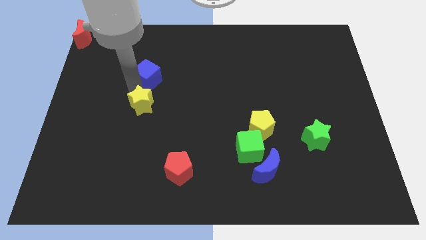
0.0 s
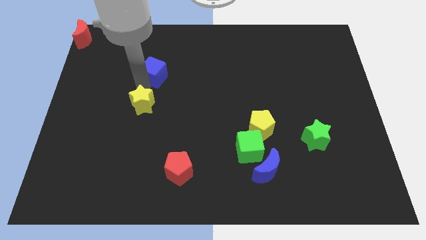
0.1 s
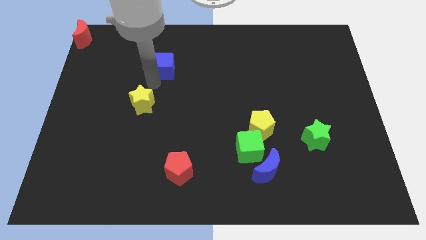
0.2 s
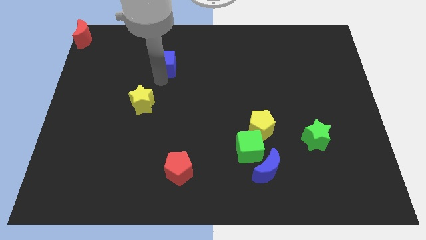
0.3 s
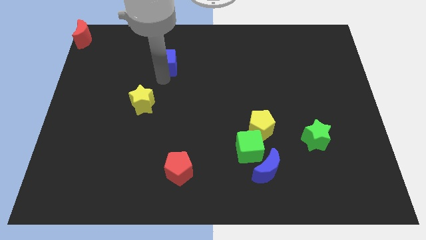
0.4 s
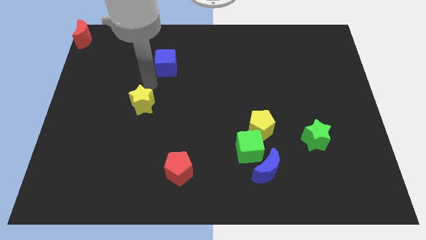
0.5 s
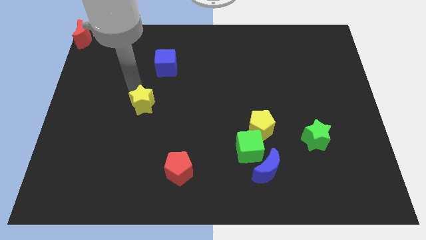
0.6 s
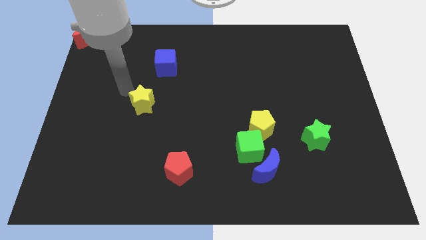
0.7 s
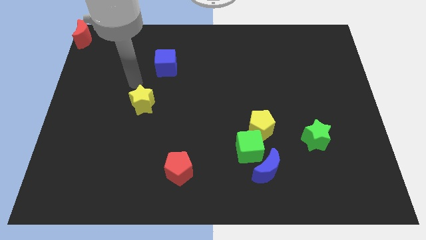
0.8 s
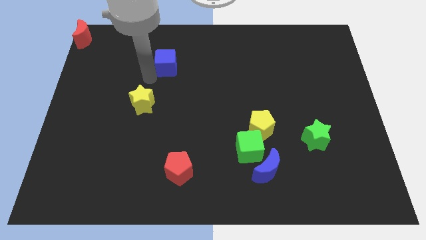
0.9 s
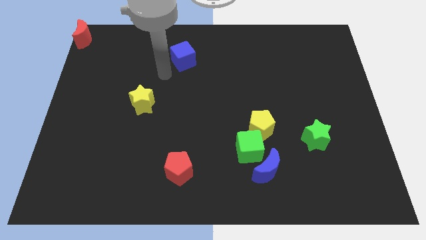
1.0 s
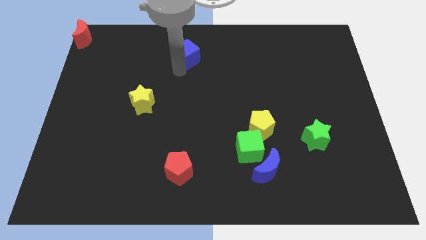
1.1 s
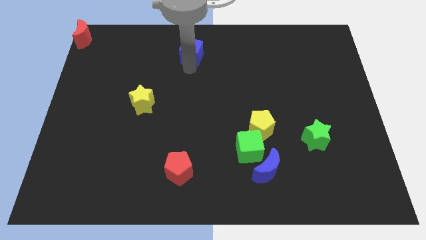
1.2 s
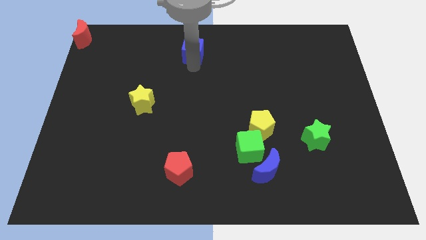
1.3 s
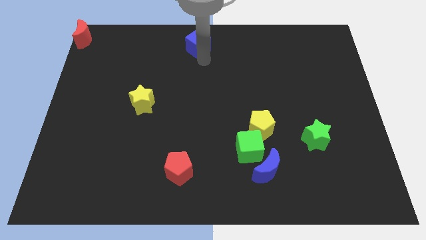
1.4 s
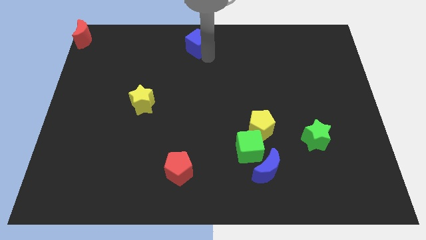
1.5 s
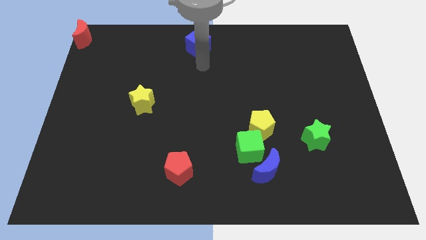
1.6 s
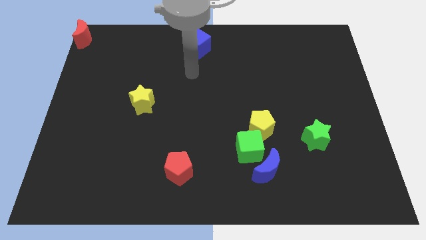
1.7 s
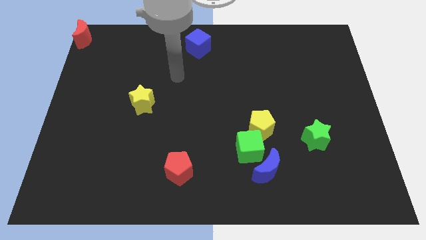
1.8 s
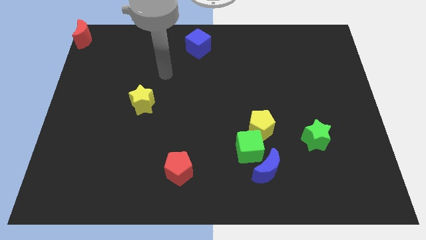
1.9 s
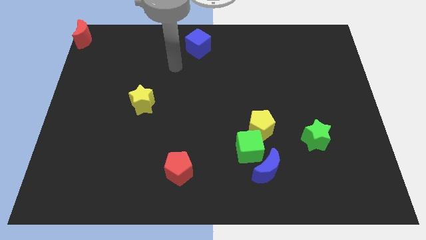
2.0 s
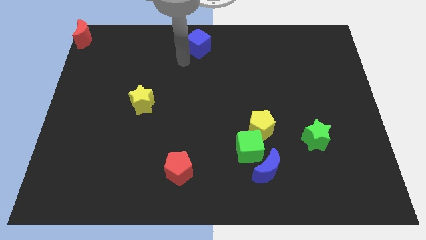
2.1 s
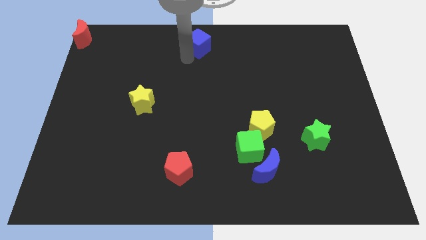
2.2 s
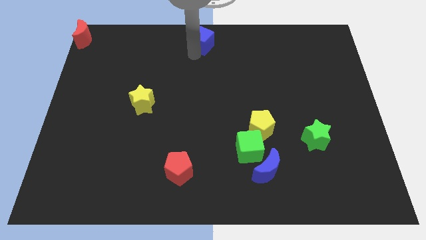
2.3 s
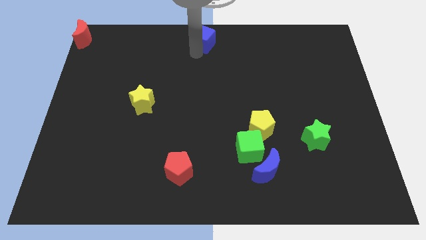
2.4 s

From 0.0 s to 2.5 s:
move the blue cube towards top center side

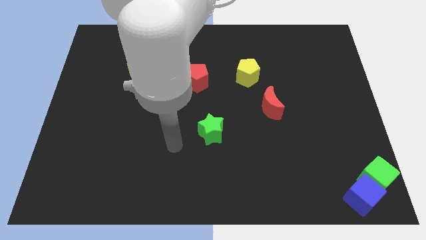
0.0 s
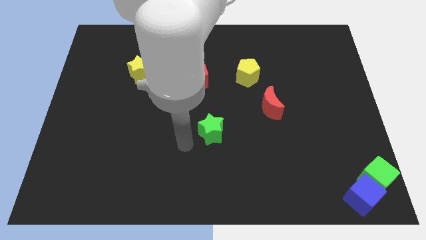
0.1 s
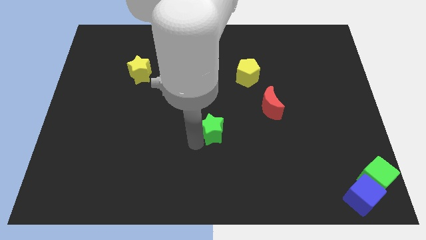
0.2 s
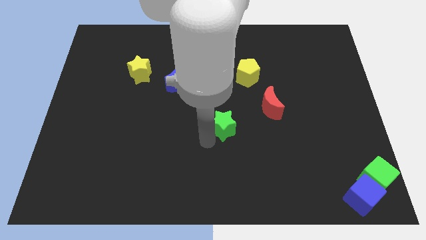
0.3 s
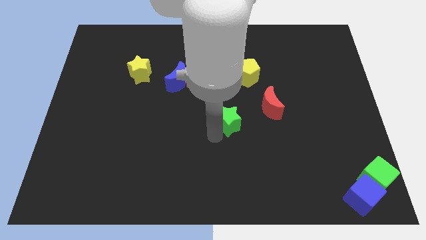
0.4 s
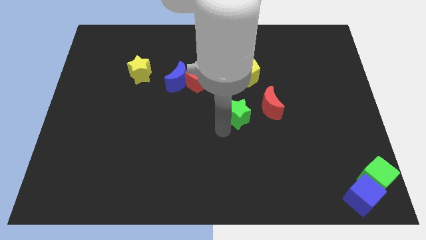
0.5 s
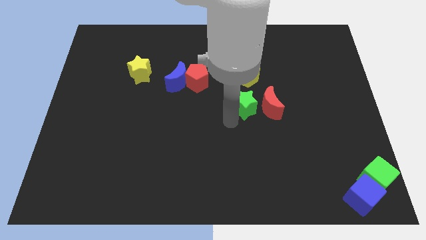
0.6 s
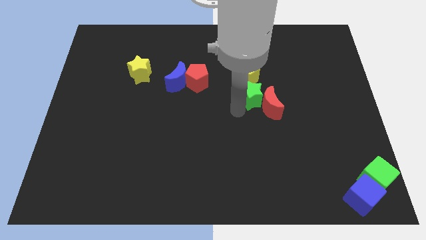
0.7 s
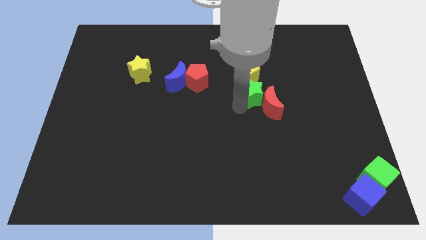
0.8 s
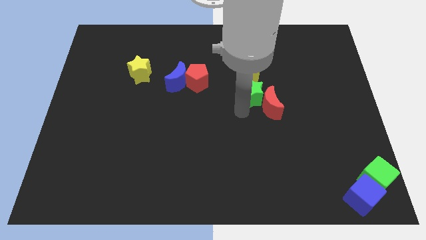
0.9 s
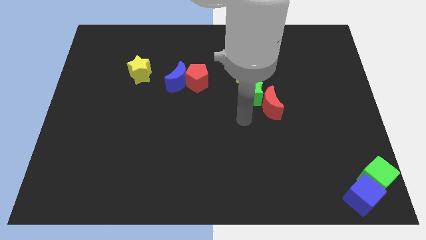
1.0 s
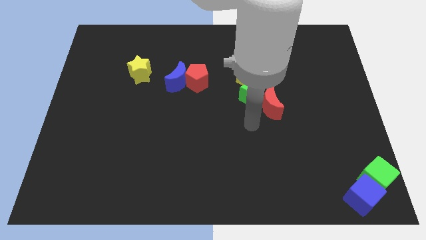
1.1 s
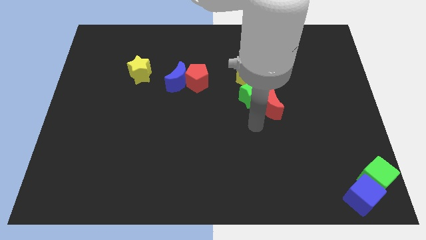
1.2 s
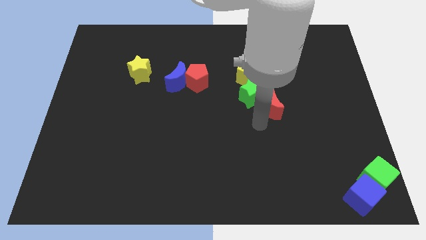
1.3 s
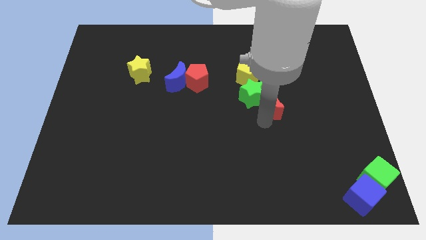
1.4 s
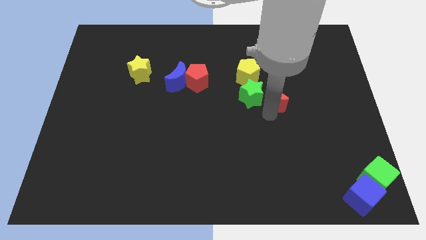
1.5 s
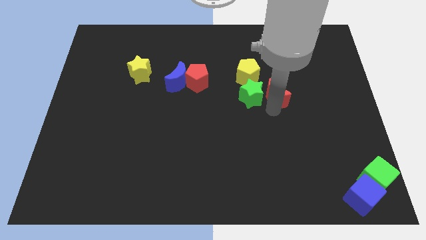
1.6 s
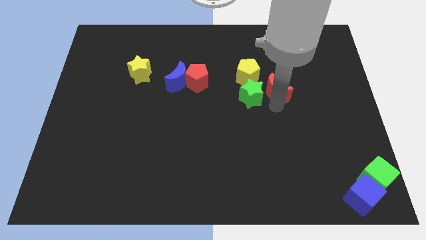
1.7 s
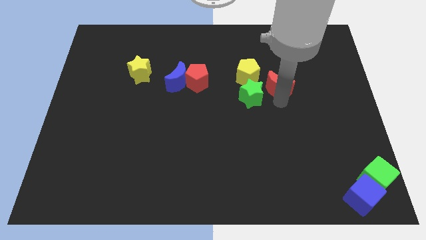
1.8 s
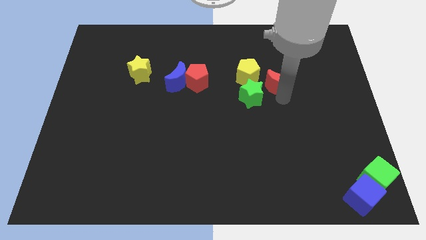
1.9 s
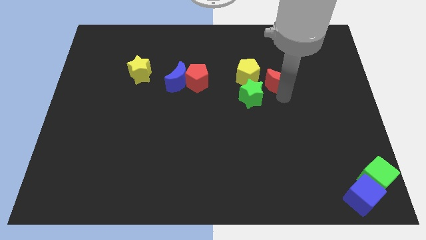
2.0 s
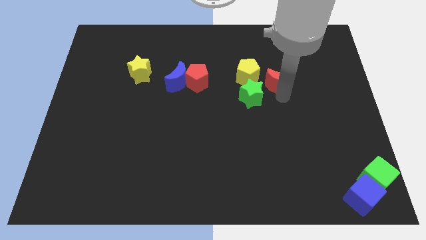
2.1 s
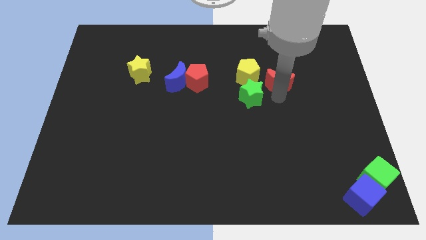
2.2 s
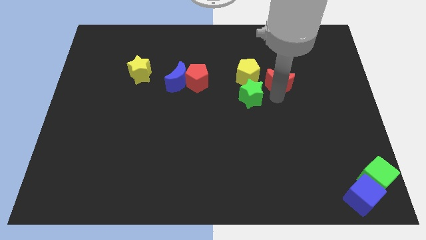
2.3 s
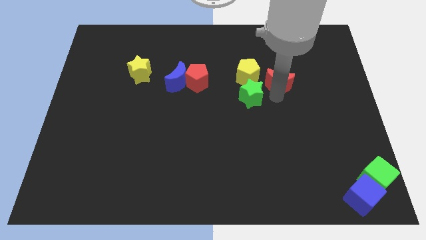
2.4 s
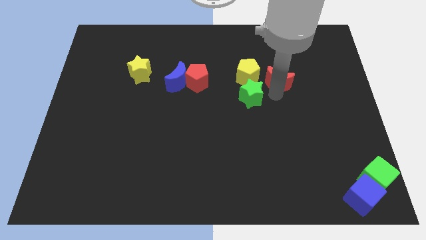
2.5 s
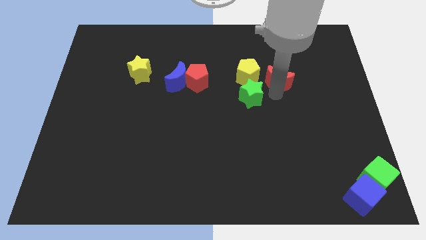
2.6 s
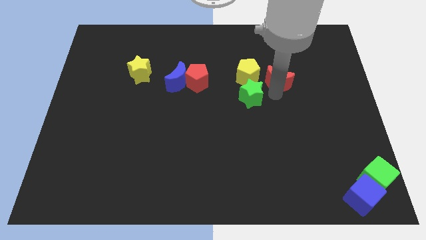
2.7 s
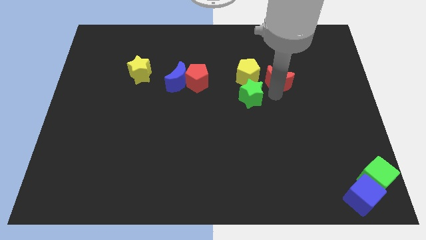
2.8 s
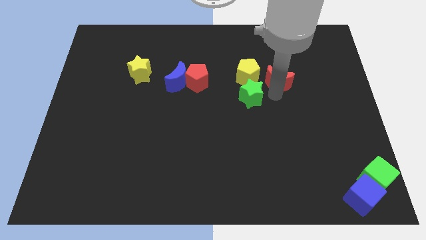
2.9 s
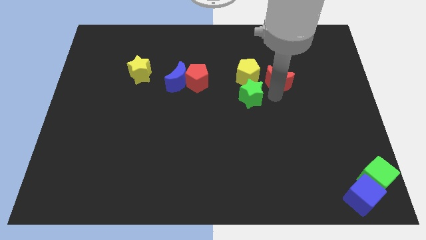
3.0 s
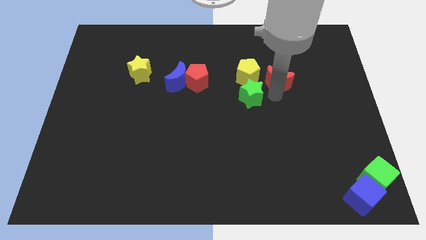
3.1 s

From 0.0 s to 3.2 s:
slide the red moon towards the top side

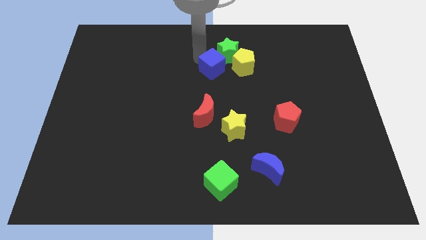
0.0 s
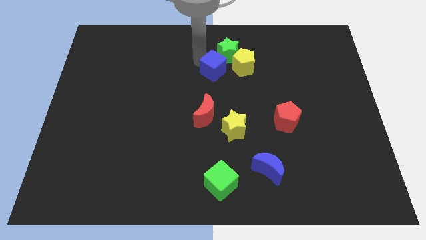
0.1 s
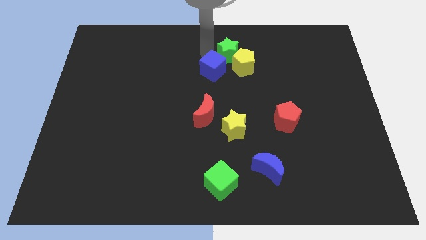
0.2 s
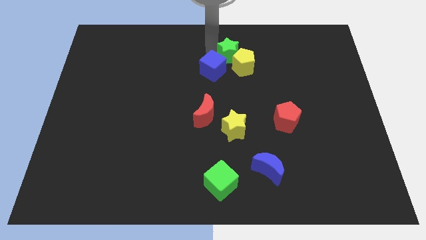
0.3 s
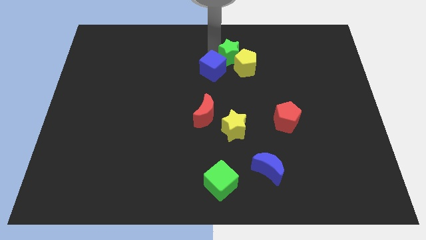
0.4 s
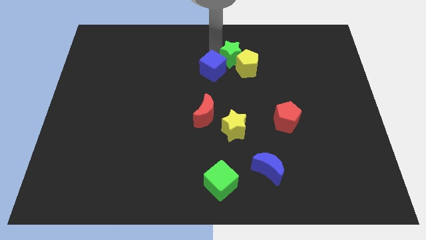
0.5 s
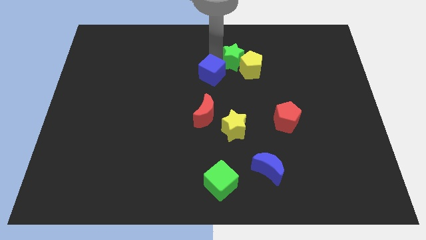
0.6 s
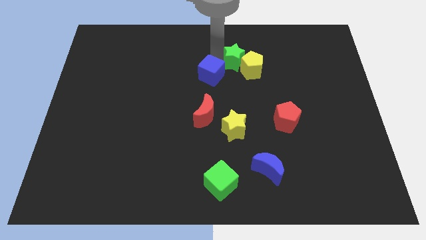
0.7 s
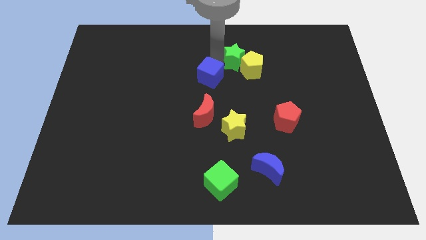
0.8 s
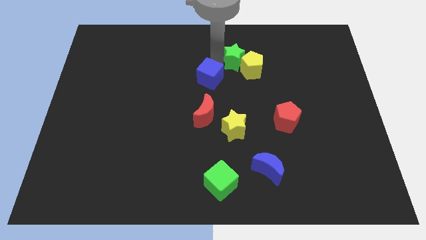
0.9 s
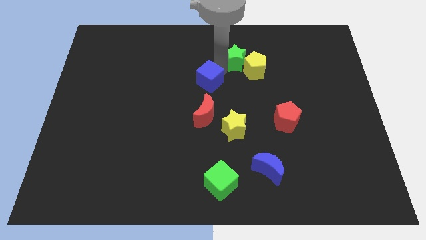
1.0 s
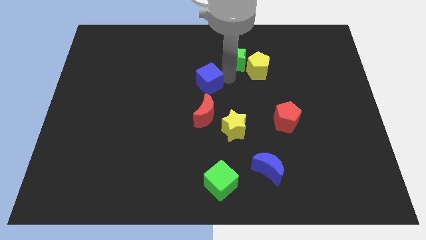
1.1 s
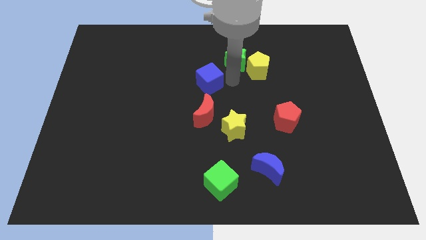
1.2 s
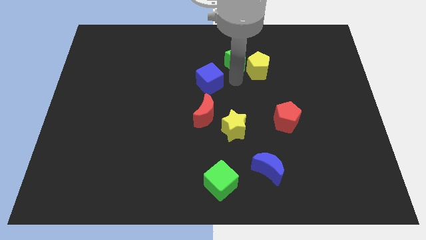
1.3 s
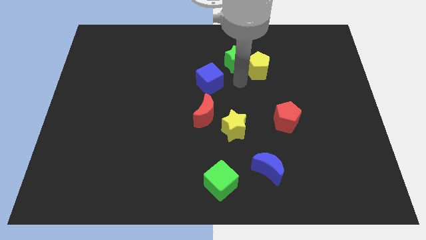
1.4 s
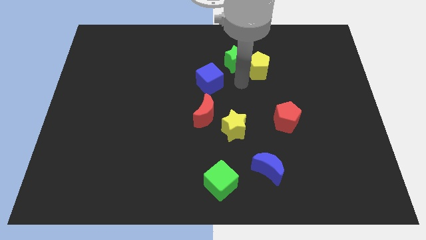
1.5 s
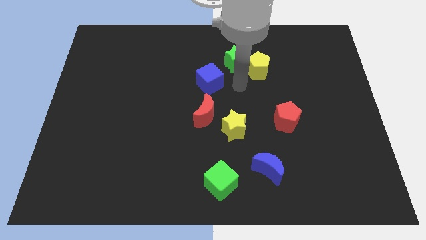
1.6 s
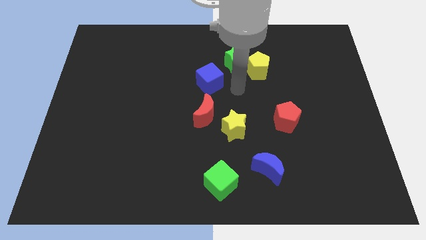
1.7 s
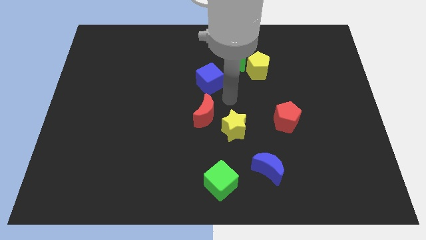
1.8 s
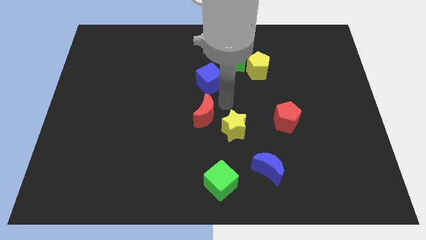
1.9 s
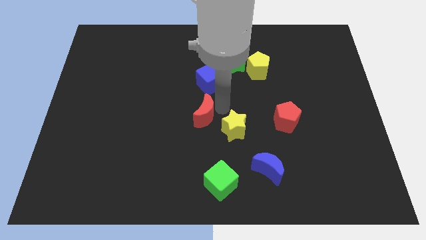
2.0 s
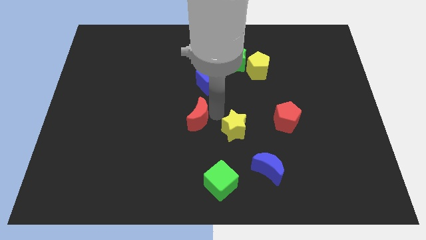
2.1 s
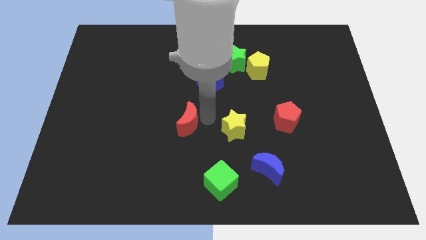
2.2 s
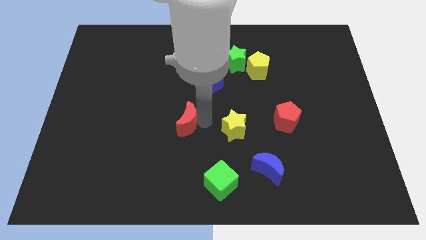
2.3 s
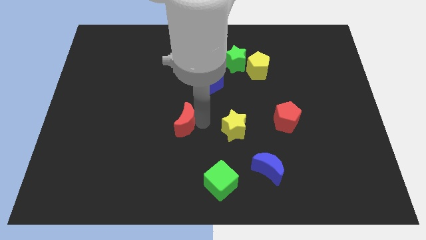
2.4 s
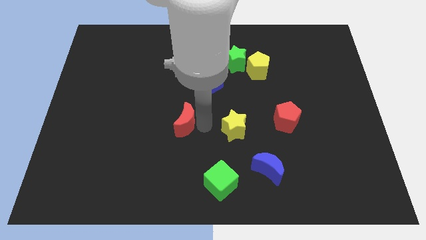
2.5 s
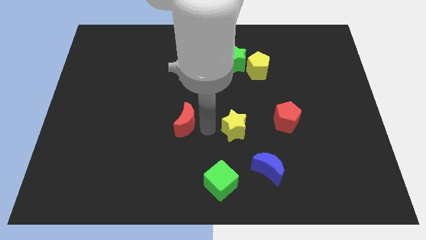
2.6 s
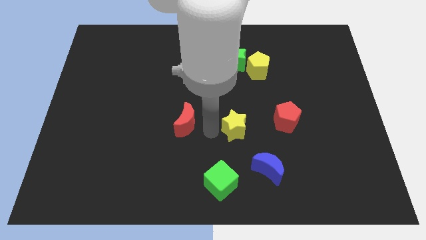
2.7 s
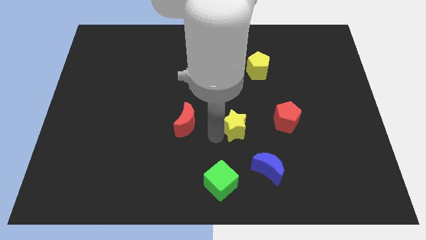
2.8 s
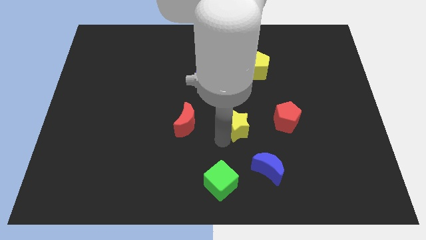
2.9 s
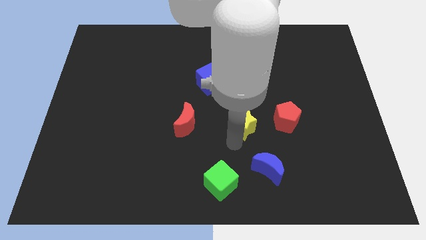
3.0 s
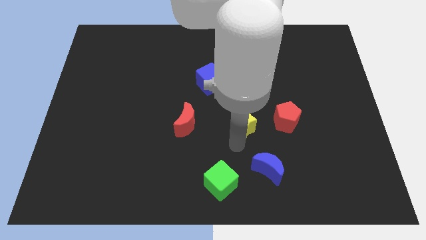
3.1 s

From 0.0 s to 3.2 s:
adjust the group of blocks to form circle

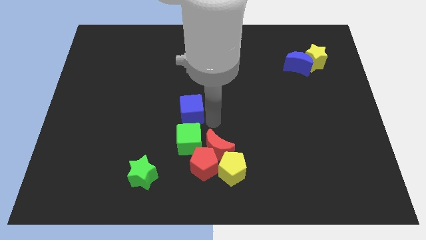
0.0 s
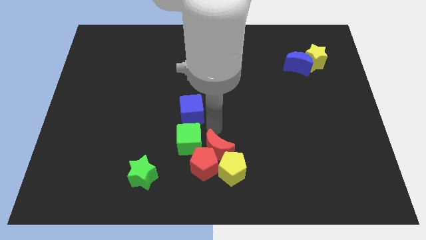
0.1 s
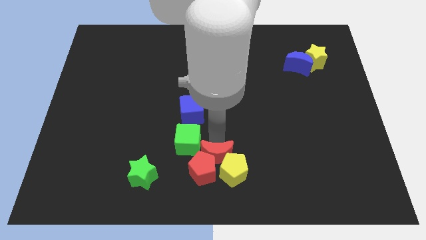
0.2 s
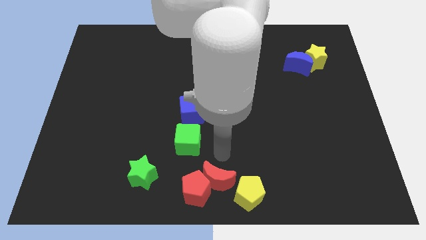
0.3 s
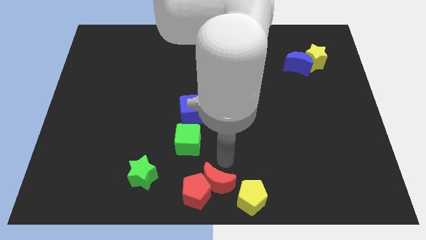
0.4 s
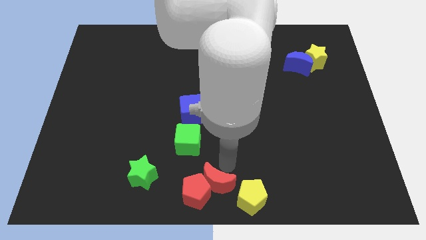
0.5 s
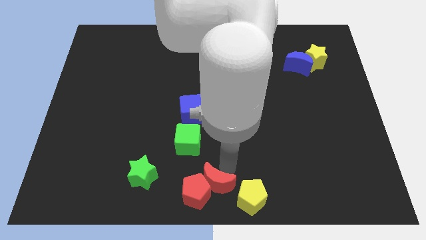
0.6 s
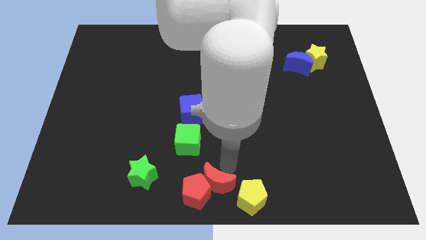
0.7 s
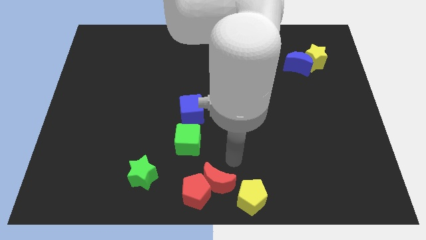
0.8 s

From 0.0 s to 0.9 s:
push the red blocks and yellow pentagon at the bottom center of the board
